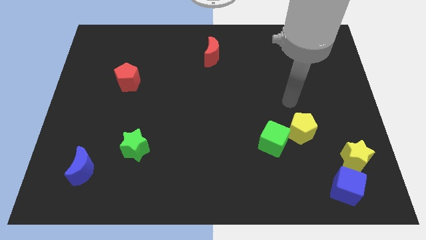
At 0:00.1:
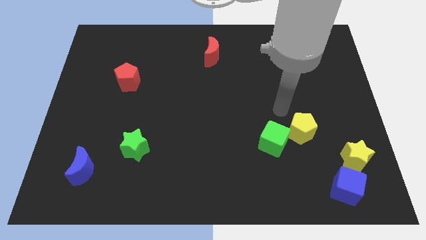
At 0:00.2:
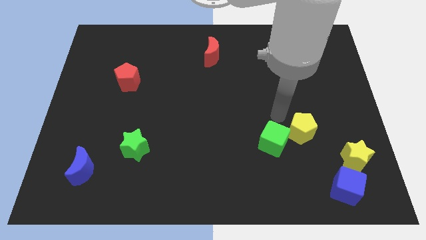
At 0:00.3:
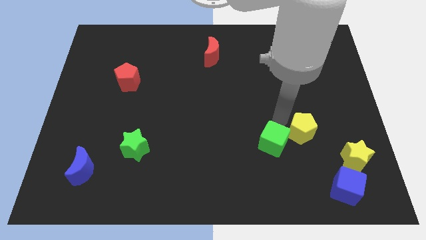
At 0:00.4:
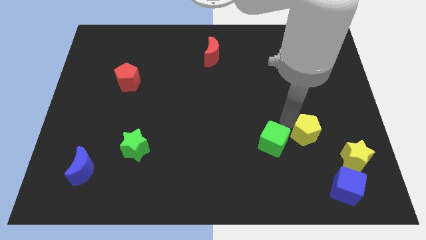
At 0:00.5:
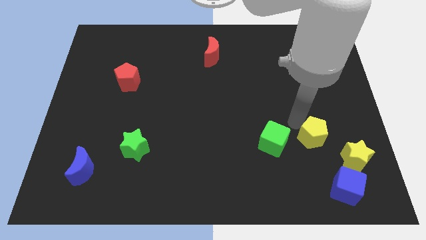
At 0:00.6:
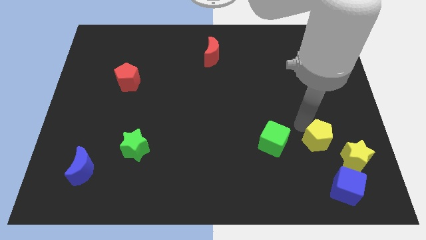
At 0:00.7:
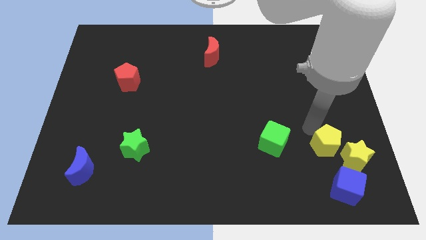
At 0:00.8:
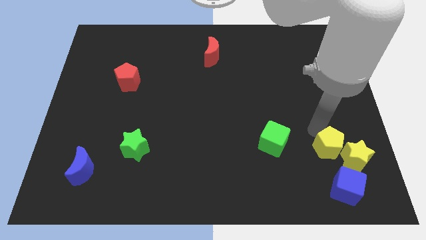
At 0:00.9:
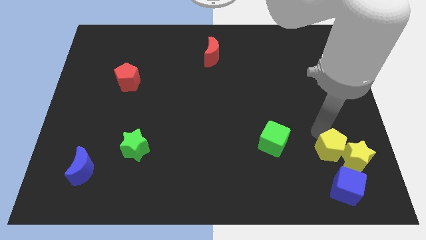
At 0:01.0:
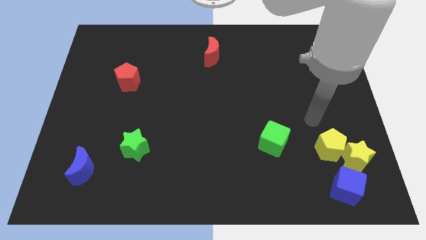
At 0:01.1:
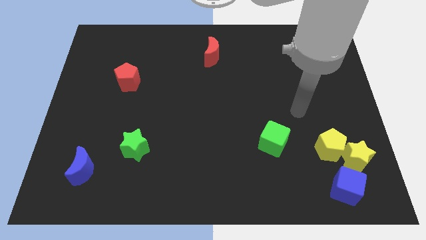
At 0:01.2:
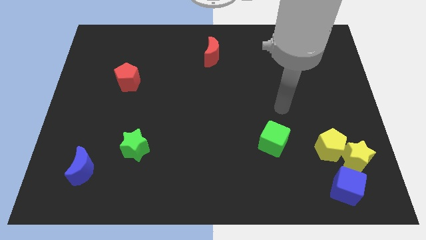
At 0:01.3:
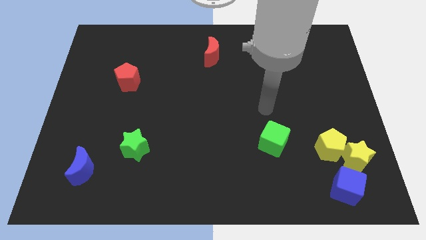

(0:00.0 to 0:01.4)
slide the yellow pentagon into the yellow star

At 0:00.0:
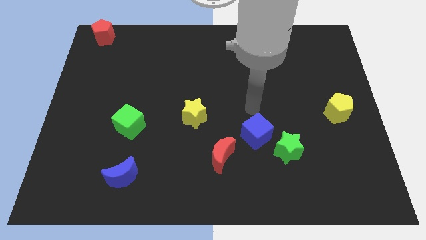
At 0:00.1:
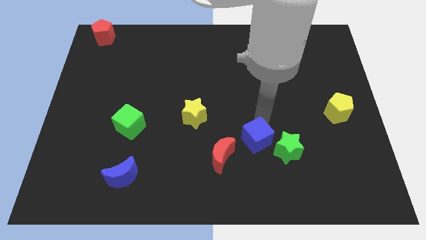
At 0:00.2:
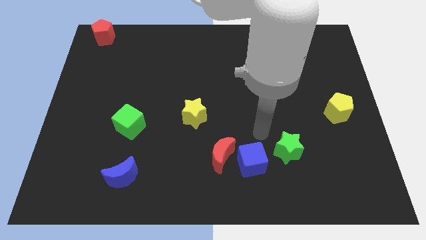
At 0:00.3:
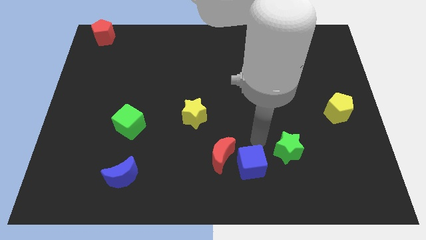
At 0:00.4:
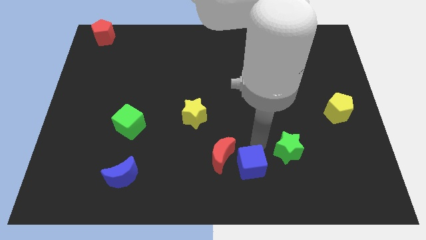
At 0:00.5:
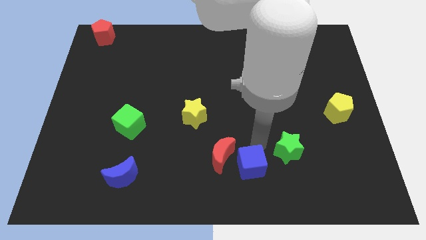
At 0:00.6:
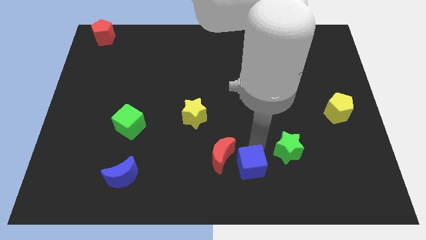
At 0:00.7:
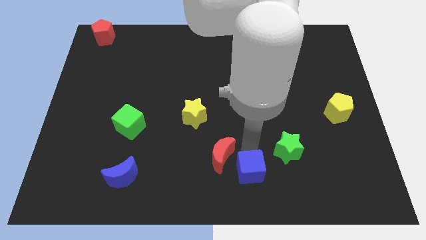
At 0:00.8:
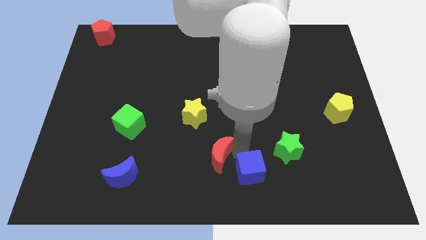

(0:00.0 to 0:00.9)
place blue cube beside red crescent

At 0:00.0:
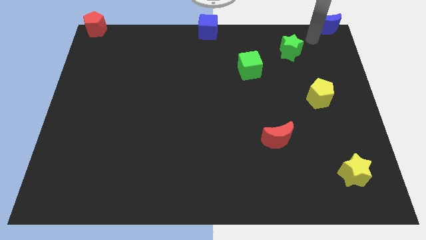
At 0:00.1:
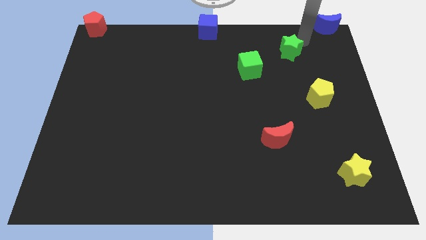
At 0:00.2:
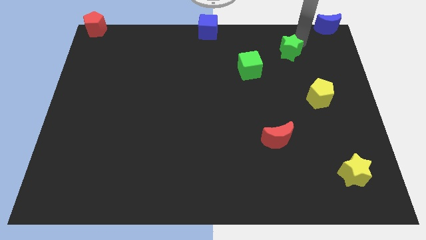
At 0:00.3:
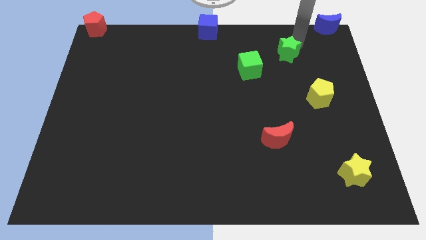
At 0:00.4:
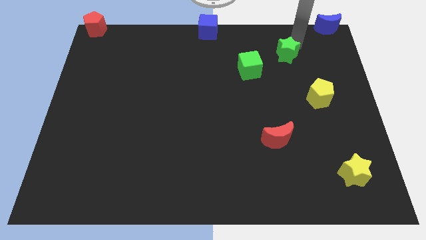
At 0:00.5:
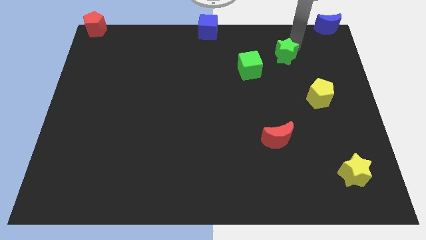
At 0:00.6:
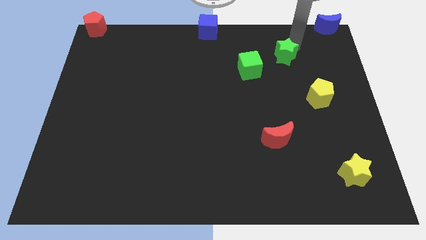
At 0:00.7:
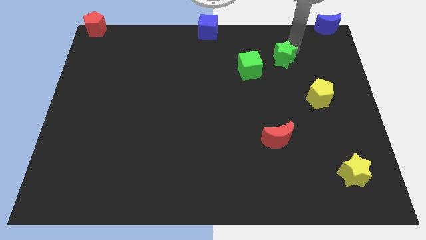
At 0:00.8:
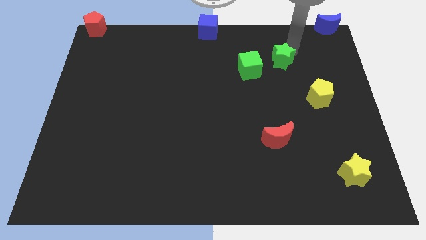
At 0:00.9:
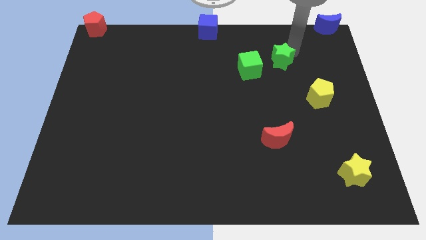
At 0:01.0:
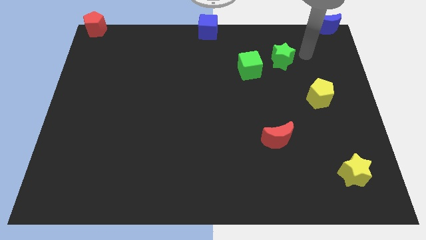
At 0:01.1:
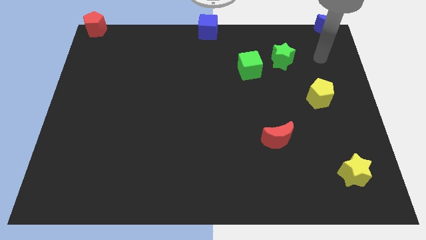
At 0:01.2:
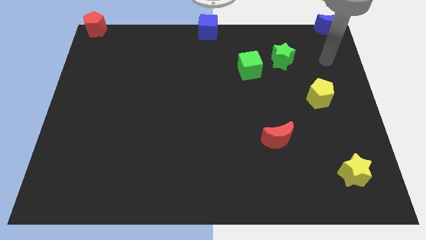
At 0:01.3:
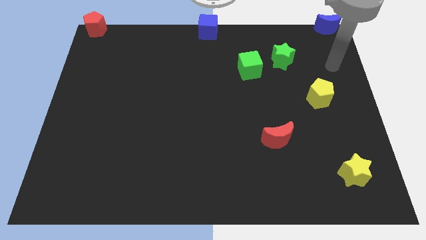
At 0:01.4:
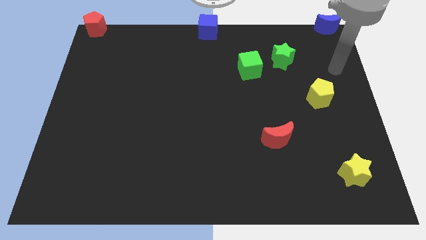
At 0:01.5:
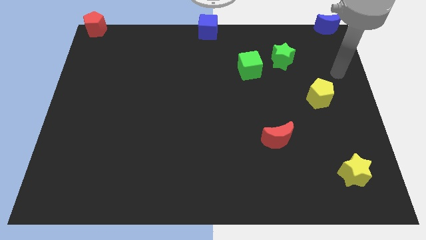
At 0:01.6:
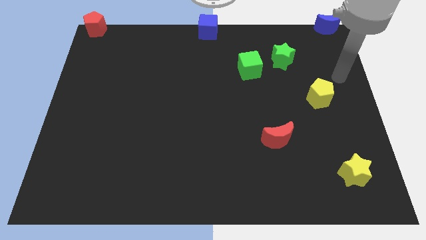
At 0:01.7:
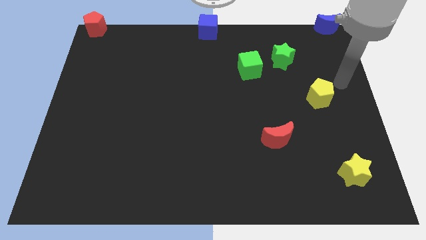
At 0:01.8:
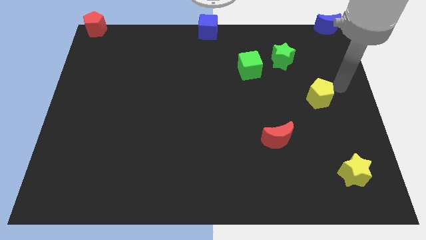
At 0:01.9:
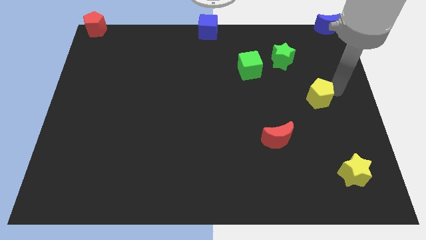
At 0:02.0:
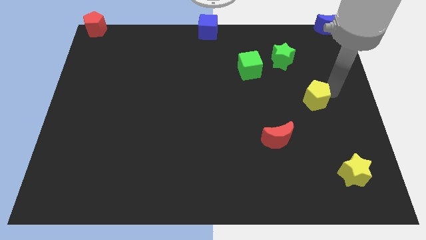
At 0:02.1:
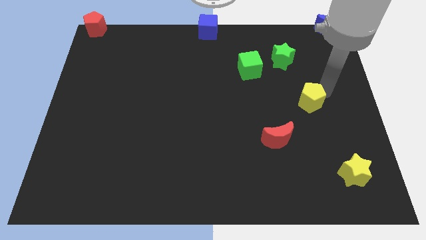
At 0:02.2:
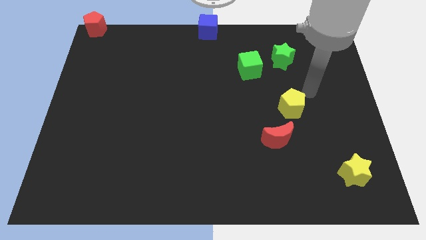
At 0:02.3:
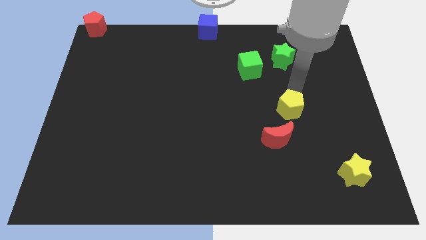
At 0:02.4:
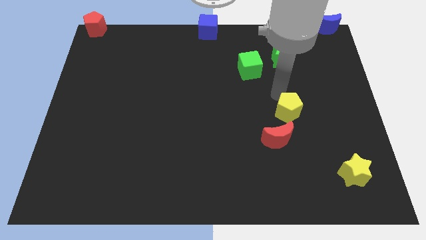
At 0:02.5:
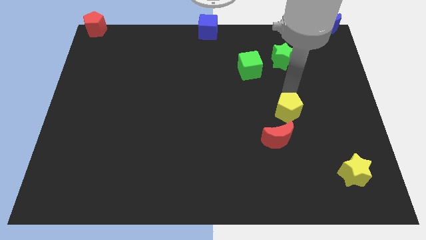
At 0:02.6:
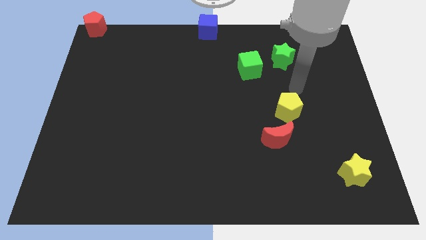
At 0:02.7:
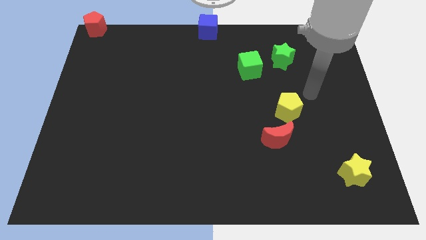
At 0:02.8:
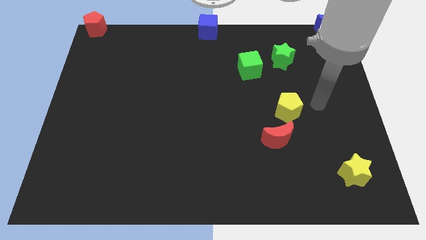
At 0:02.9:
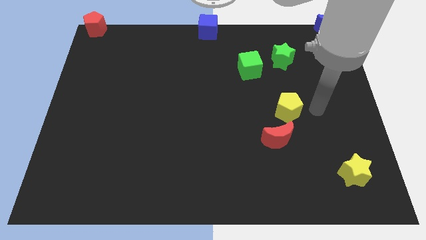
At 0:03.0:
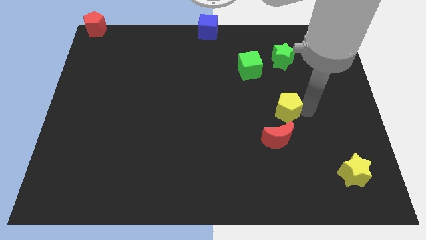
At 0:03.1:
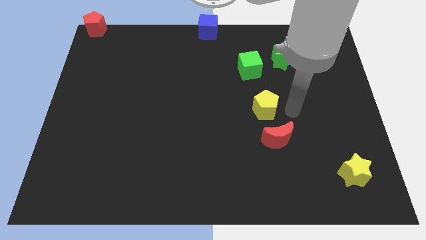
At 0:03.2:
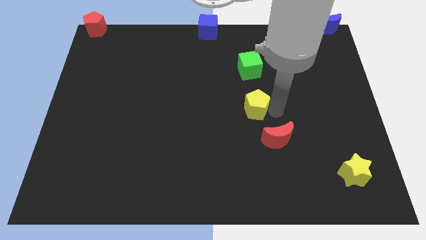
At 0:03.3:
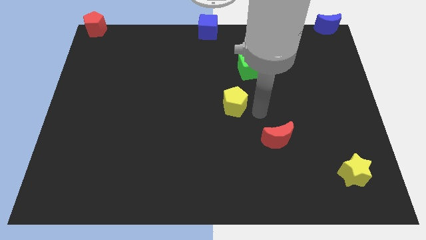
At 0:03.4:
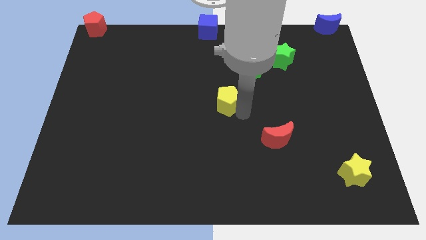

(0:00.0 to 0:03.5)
push the yellow pentagon towards the center of the board

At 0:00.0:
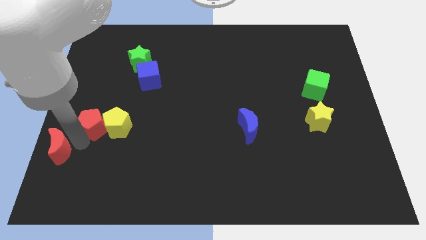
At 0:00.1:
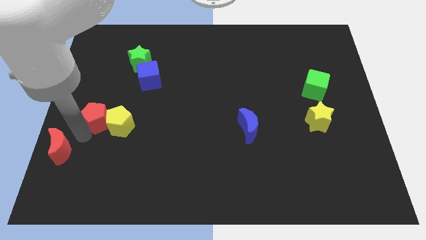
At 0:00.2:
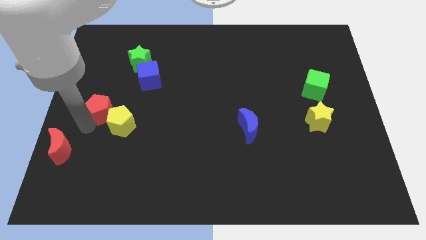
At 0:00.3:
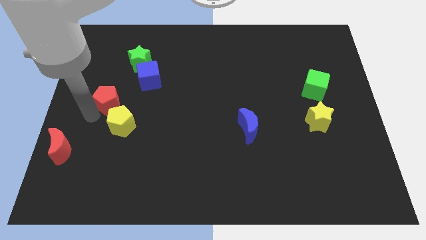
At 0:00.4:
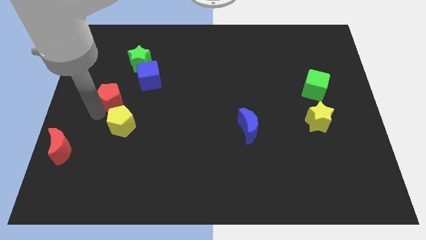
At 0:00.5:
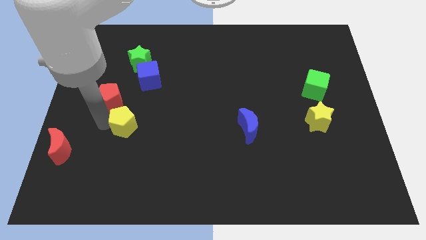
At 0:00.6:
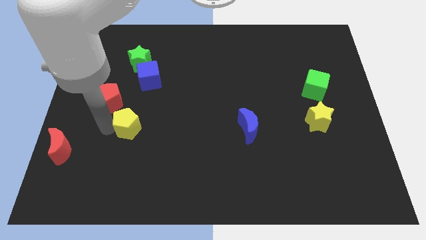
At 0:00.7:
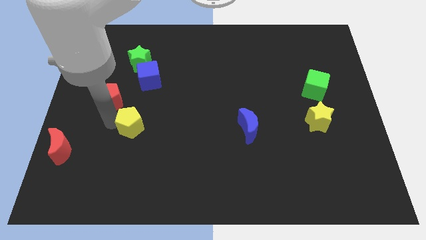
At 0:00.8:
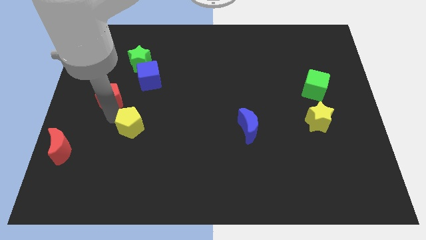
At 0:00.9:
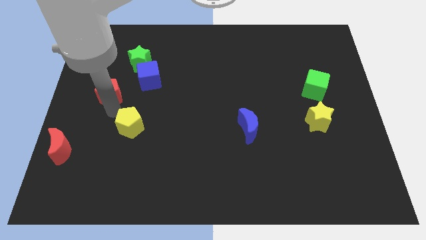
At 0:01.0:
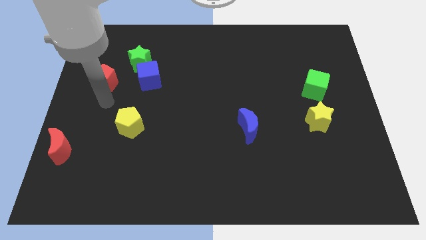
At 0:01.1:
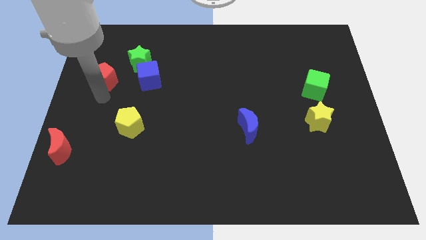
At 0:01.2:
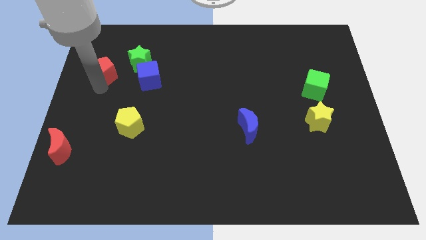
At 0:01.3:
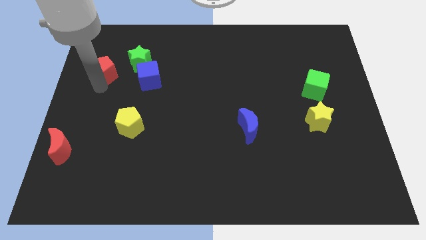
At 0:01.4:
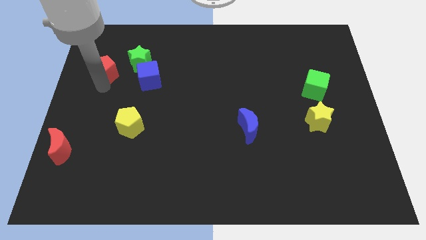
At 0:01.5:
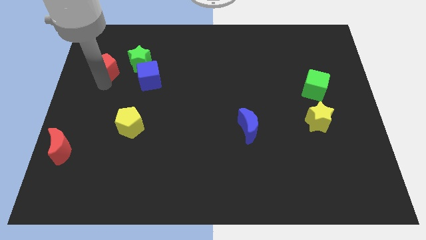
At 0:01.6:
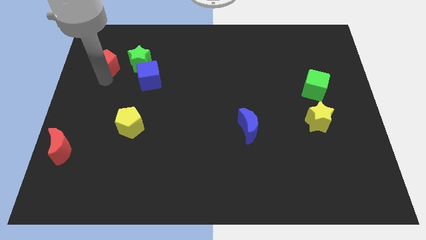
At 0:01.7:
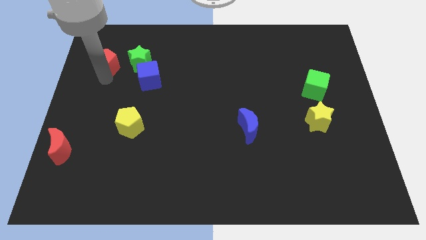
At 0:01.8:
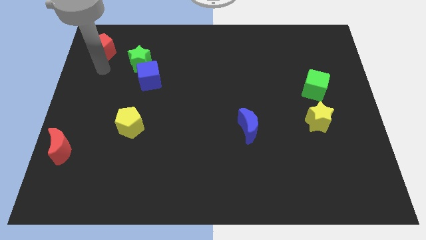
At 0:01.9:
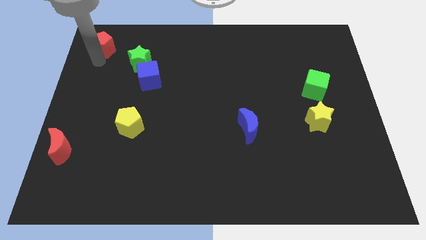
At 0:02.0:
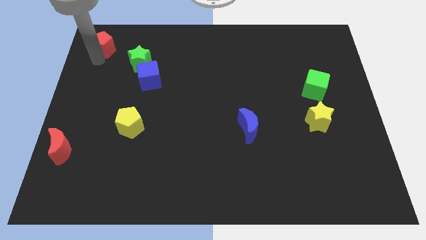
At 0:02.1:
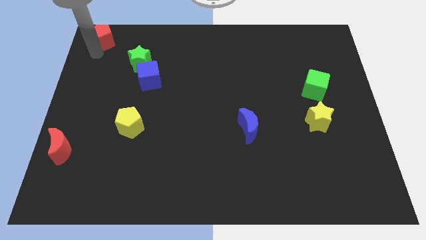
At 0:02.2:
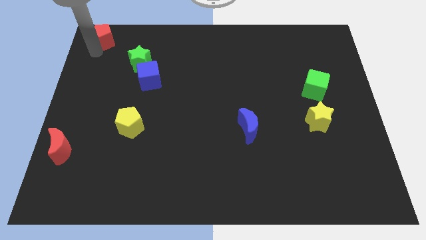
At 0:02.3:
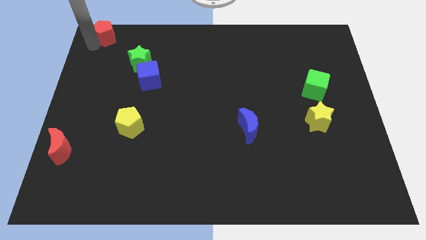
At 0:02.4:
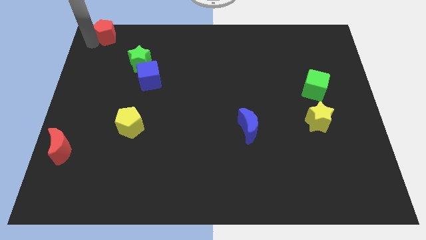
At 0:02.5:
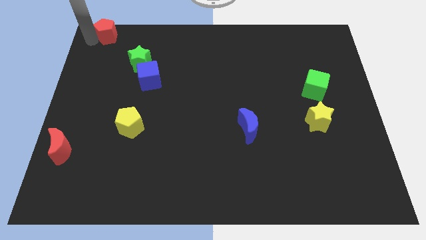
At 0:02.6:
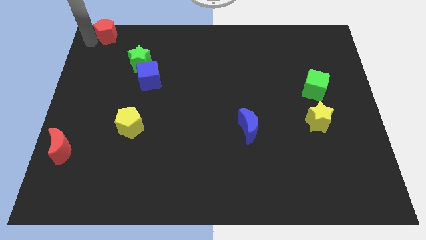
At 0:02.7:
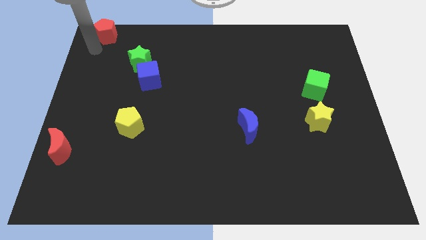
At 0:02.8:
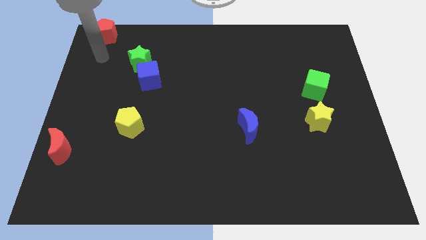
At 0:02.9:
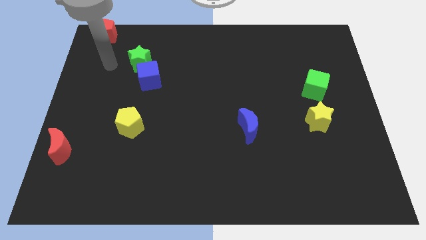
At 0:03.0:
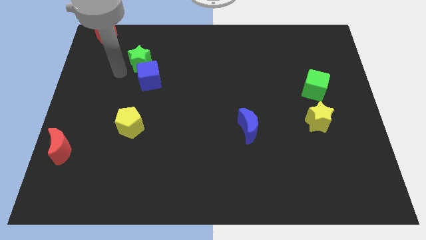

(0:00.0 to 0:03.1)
place the red pentagon at the top left side of the board
